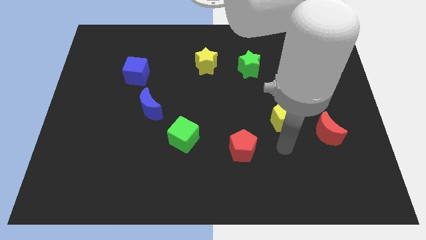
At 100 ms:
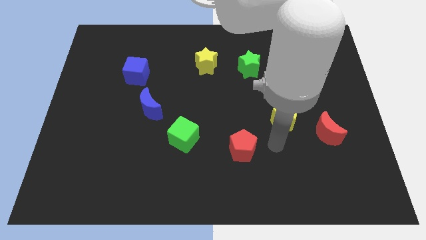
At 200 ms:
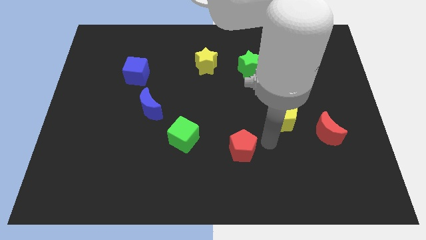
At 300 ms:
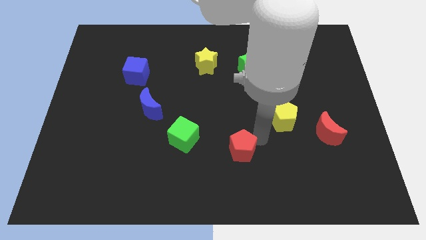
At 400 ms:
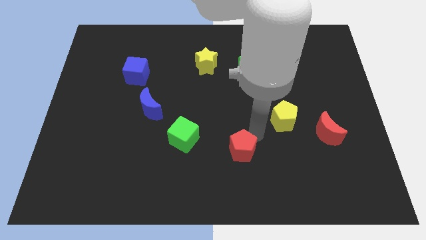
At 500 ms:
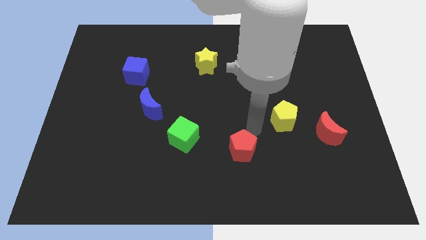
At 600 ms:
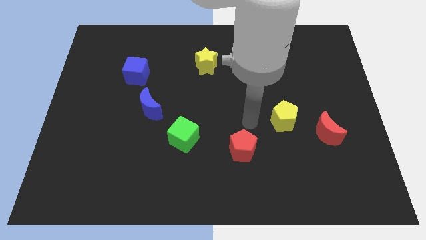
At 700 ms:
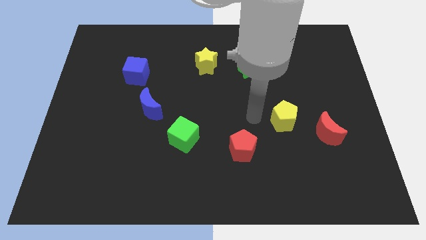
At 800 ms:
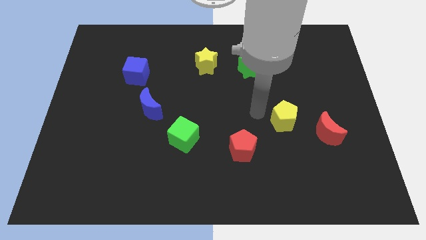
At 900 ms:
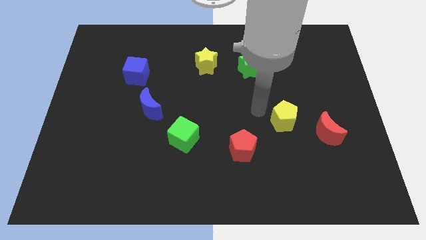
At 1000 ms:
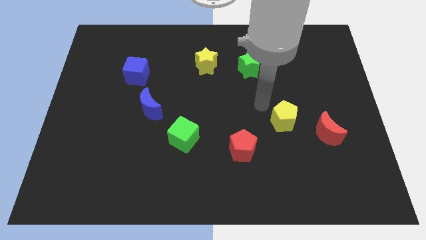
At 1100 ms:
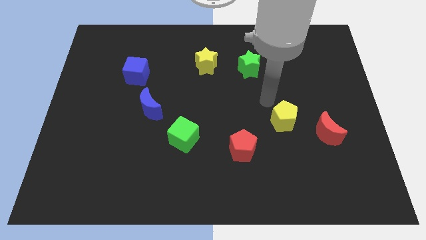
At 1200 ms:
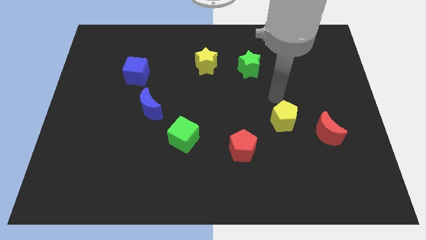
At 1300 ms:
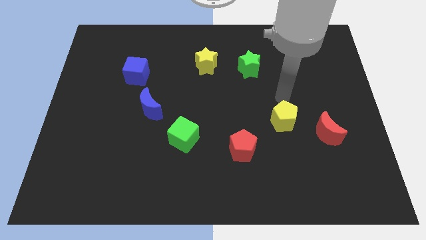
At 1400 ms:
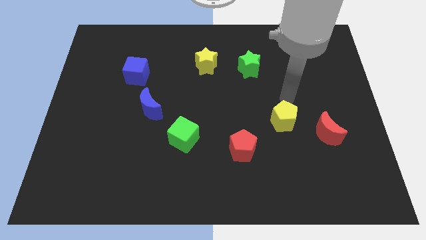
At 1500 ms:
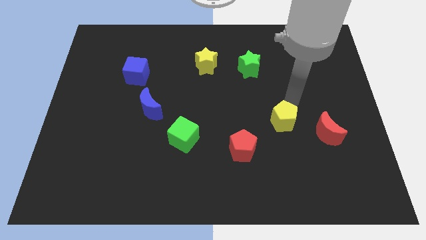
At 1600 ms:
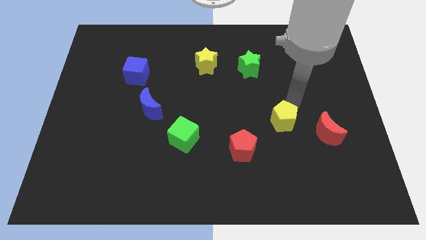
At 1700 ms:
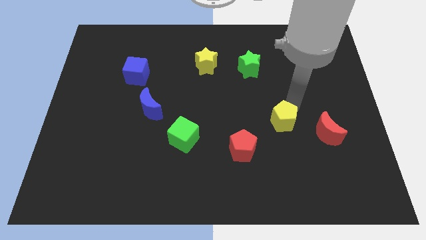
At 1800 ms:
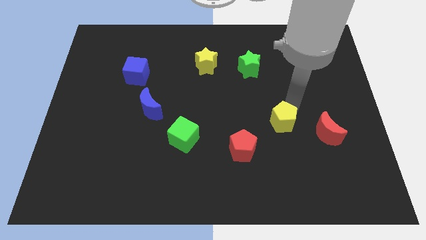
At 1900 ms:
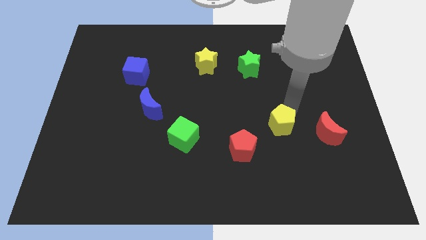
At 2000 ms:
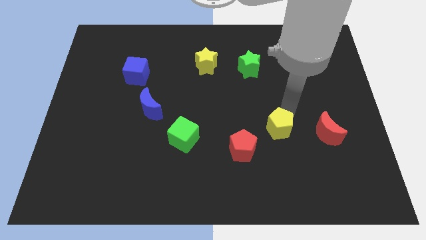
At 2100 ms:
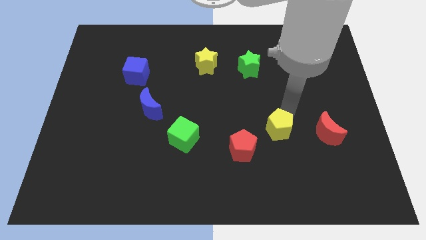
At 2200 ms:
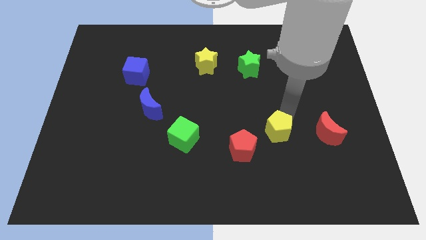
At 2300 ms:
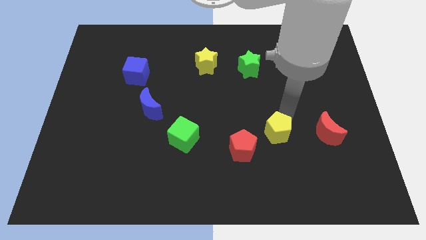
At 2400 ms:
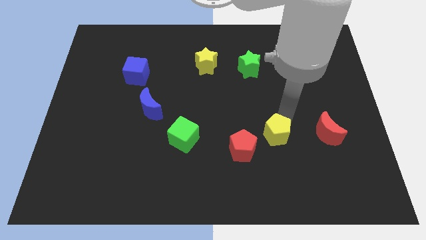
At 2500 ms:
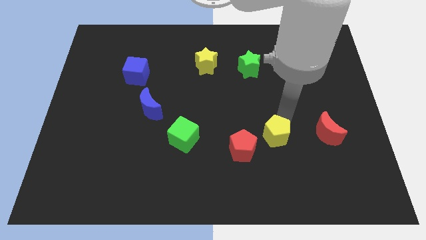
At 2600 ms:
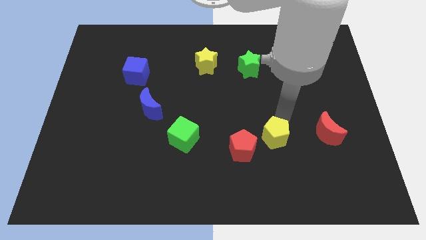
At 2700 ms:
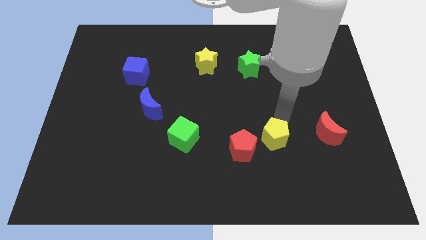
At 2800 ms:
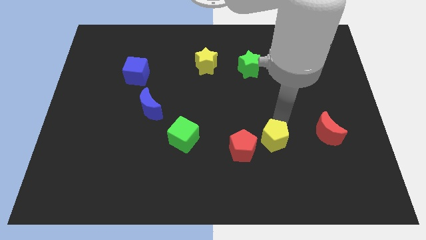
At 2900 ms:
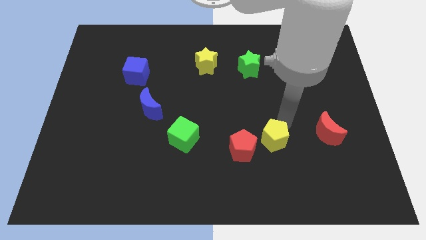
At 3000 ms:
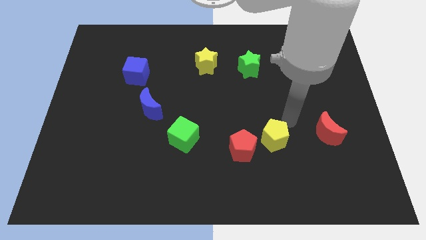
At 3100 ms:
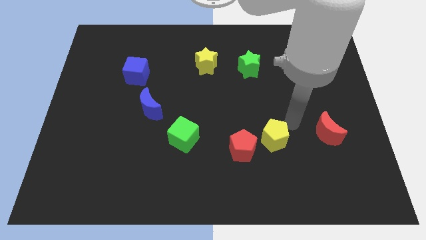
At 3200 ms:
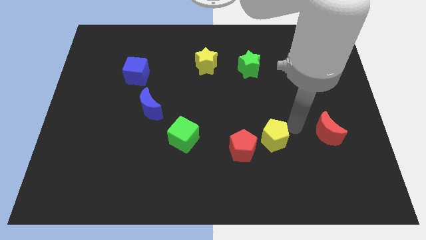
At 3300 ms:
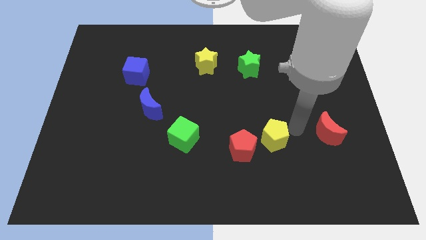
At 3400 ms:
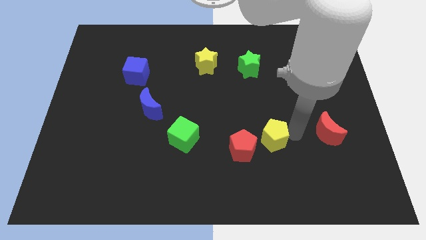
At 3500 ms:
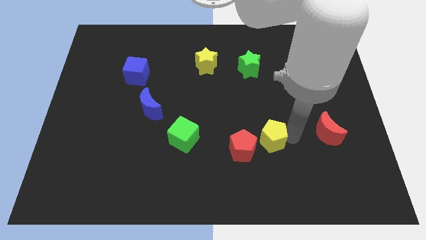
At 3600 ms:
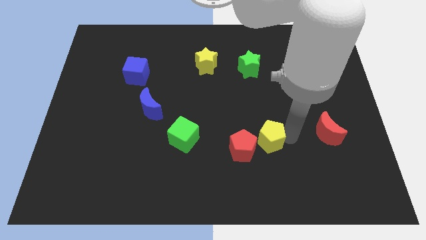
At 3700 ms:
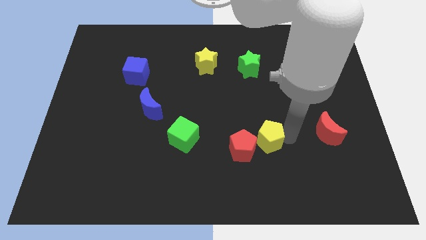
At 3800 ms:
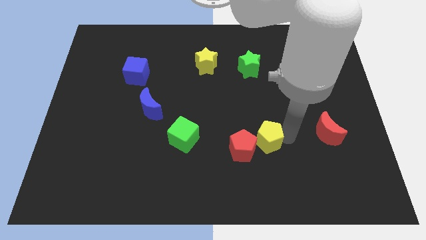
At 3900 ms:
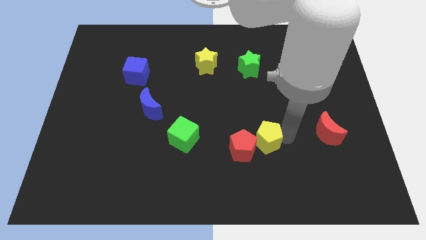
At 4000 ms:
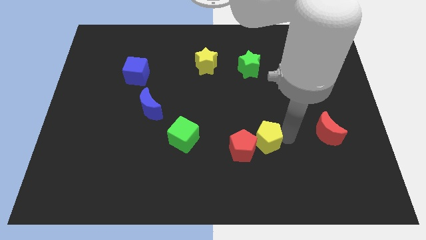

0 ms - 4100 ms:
place the yellow pentagon close to the red pentagon

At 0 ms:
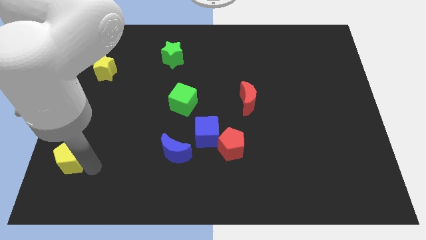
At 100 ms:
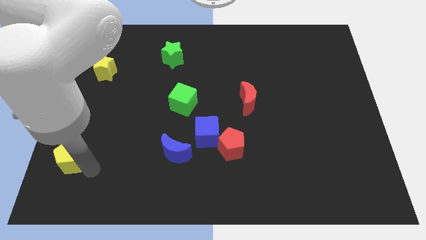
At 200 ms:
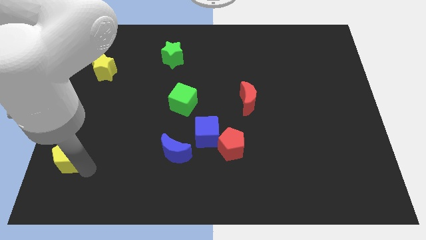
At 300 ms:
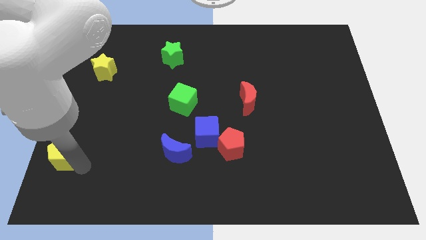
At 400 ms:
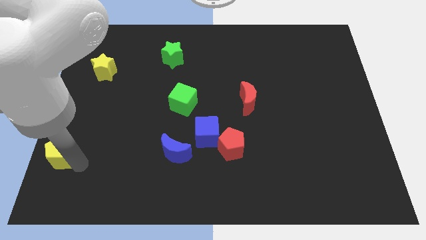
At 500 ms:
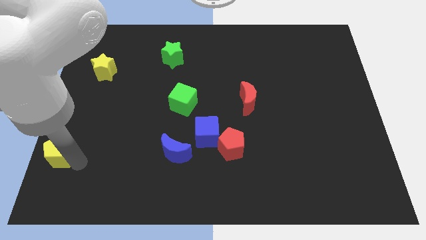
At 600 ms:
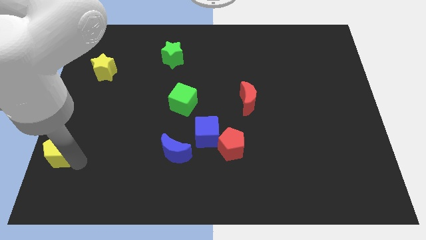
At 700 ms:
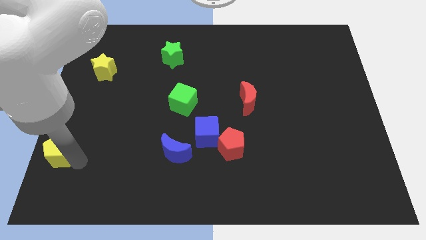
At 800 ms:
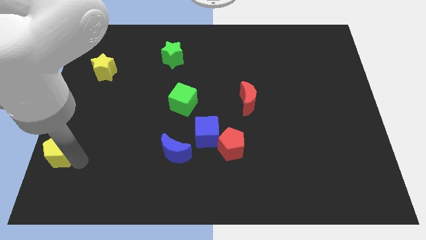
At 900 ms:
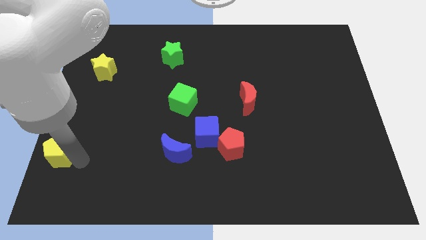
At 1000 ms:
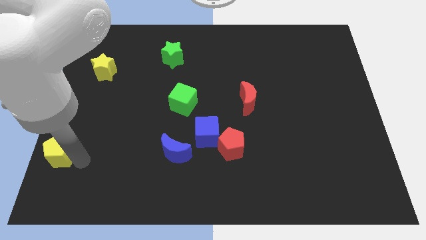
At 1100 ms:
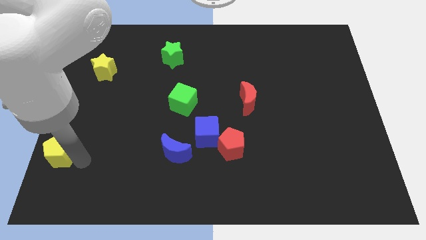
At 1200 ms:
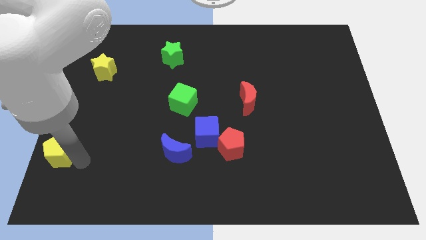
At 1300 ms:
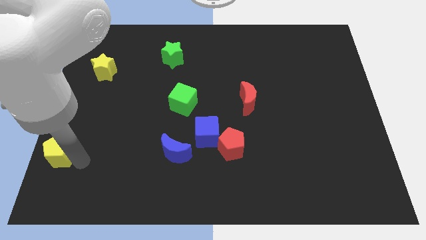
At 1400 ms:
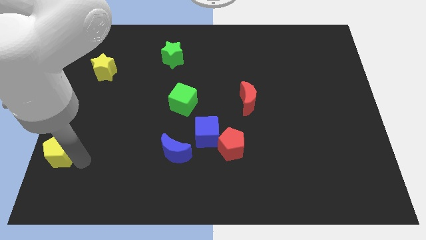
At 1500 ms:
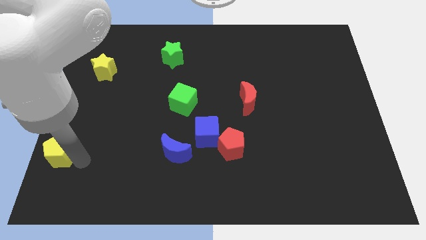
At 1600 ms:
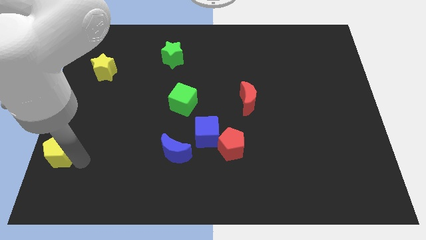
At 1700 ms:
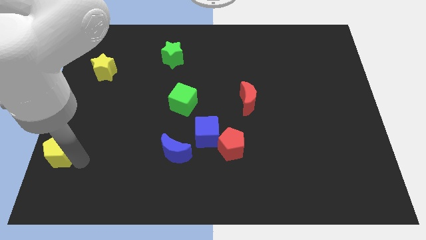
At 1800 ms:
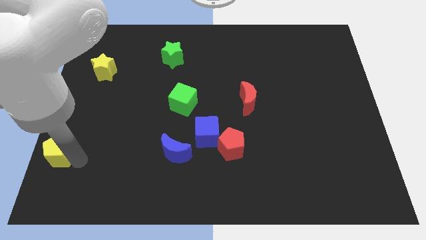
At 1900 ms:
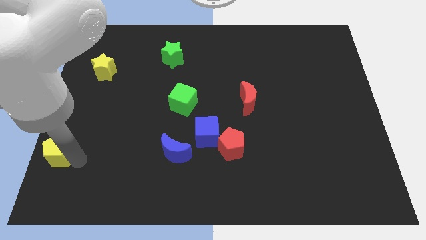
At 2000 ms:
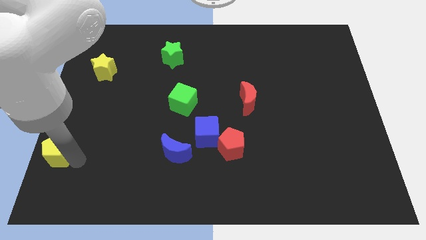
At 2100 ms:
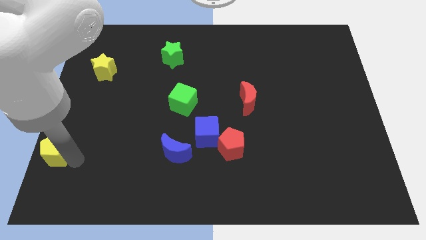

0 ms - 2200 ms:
push the yellow pentagon towards the left of the board

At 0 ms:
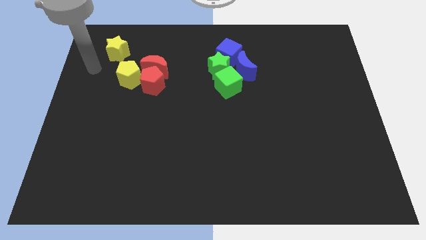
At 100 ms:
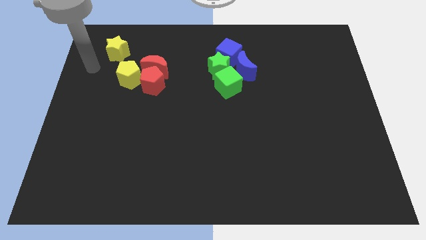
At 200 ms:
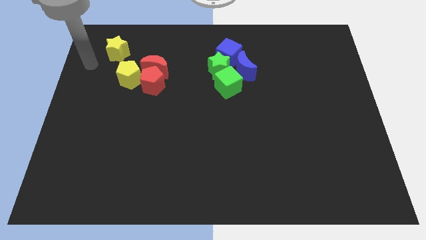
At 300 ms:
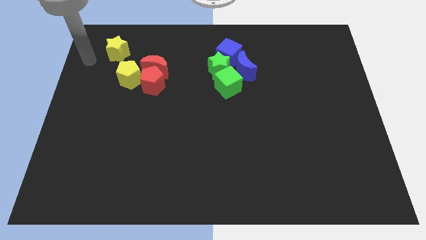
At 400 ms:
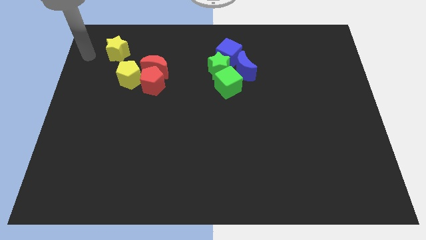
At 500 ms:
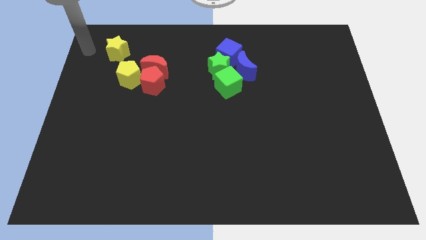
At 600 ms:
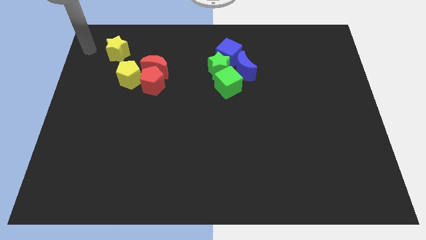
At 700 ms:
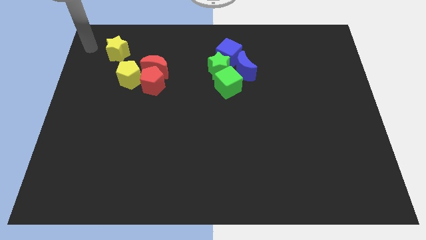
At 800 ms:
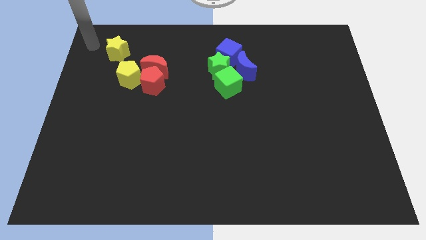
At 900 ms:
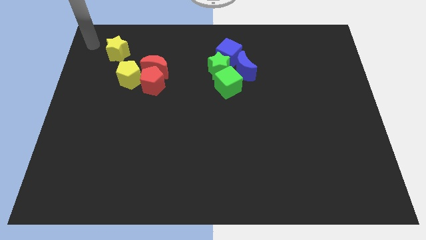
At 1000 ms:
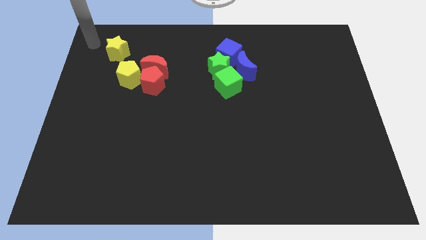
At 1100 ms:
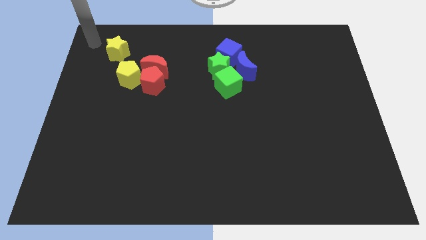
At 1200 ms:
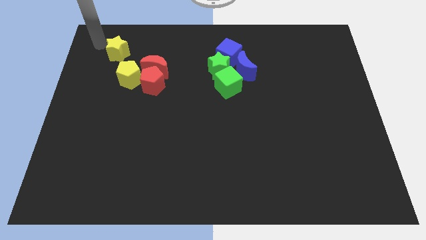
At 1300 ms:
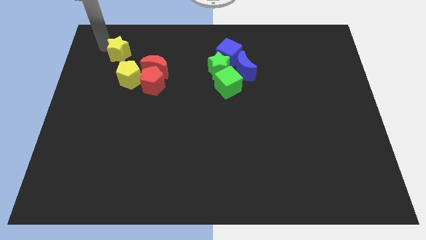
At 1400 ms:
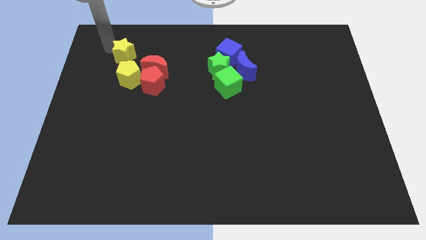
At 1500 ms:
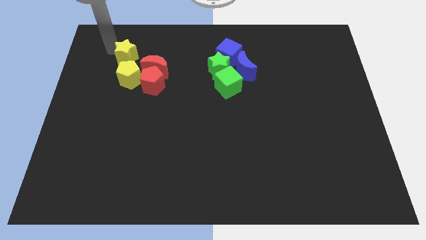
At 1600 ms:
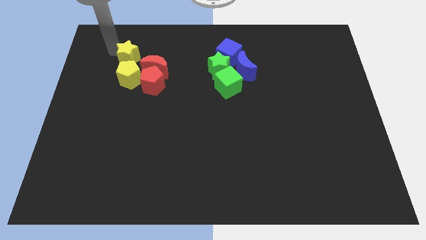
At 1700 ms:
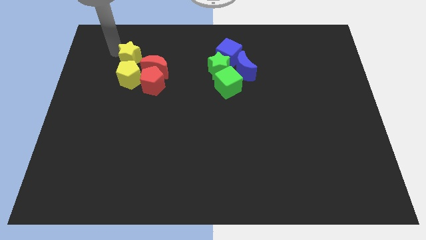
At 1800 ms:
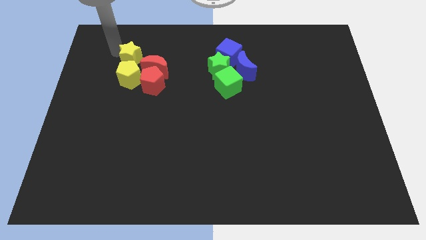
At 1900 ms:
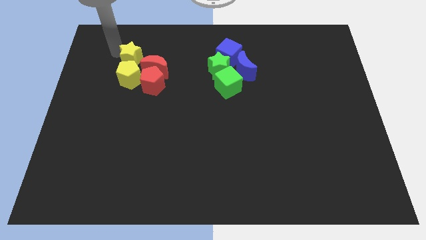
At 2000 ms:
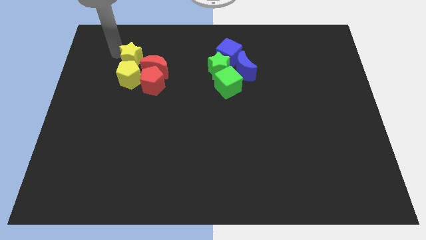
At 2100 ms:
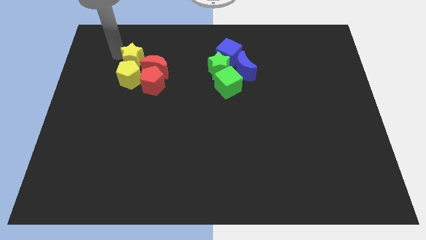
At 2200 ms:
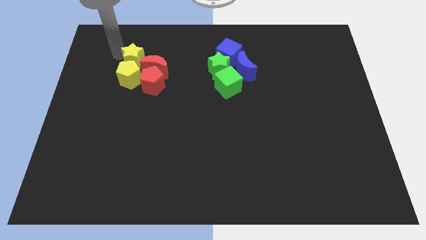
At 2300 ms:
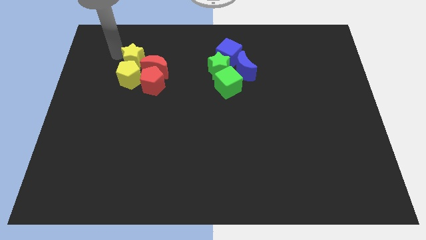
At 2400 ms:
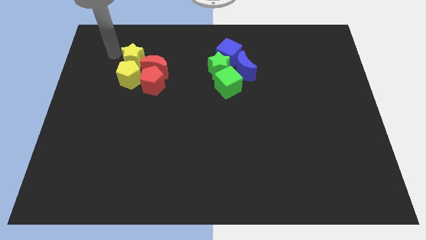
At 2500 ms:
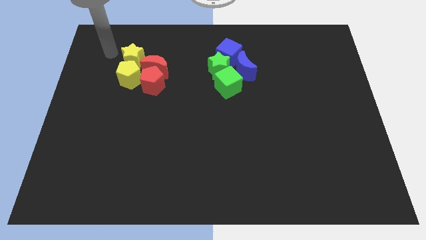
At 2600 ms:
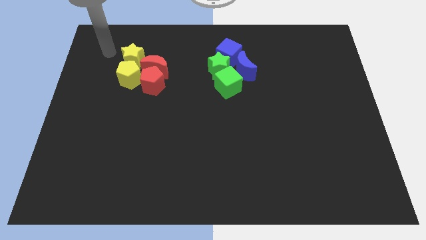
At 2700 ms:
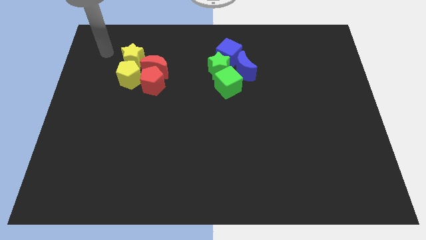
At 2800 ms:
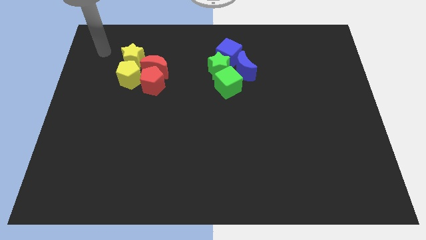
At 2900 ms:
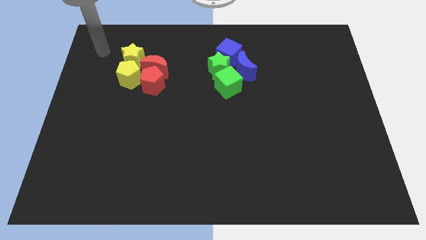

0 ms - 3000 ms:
move yellow star to the top of yellow pentagon
